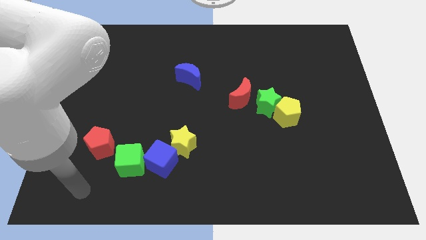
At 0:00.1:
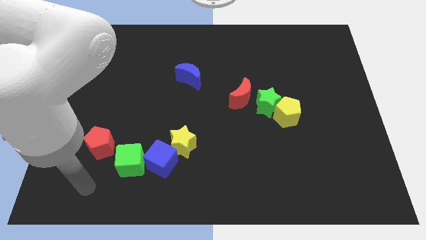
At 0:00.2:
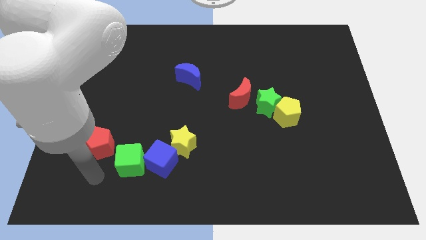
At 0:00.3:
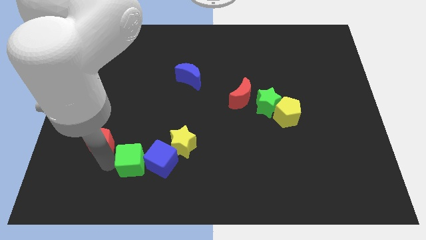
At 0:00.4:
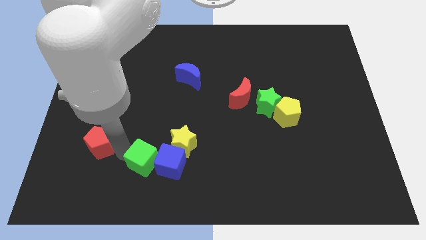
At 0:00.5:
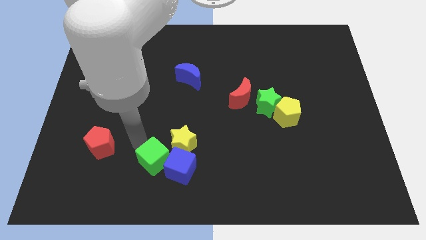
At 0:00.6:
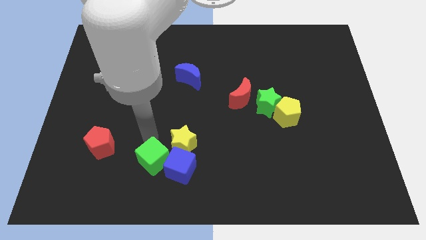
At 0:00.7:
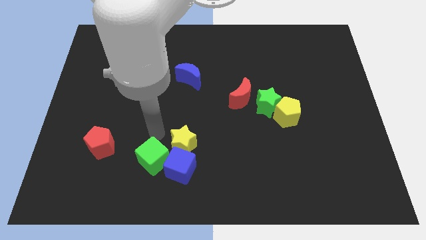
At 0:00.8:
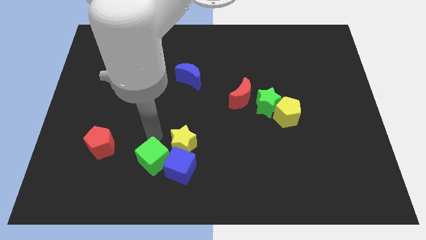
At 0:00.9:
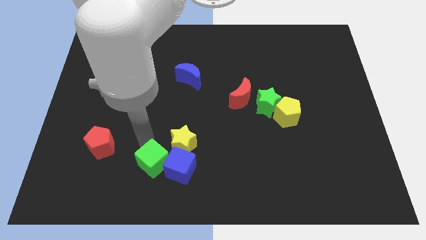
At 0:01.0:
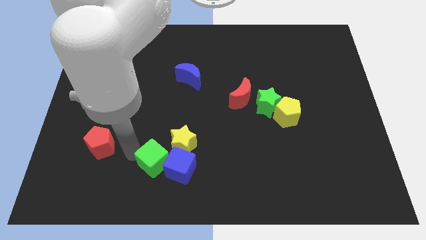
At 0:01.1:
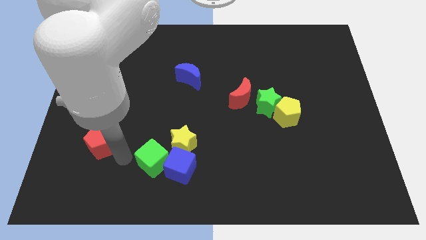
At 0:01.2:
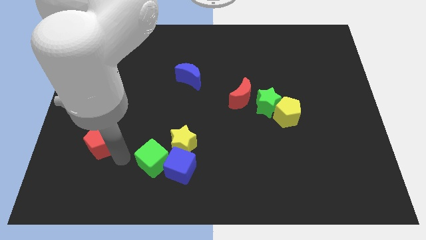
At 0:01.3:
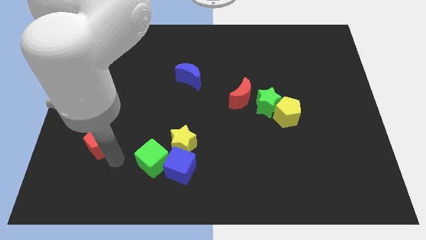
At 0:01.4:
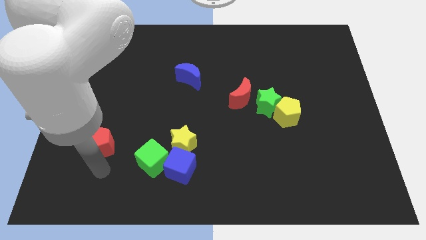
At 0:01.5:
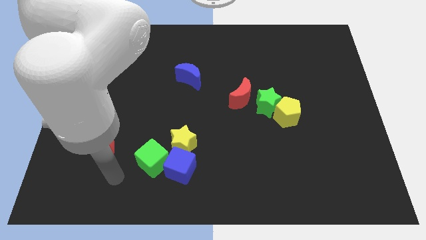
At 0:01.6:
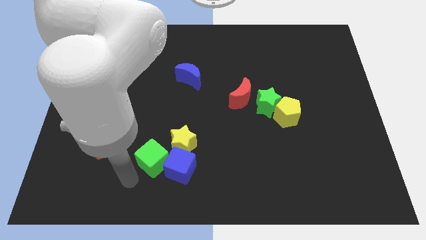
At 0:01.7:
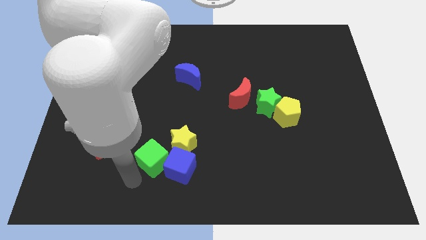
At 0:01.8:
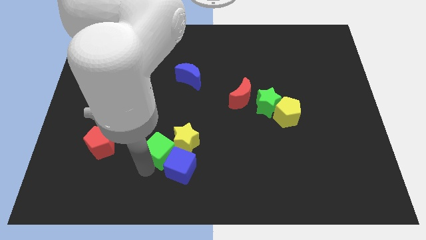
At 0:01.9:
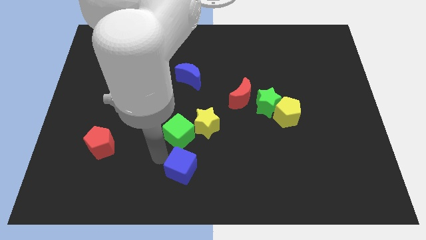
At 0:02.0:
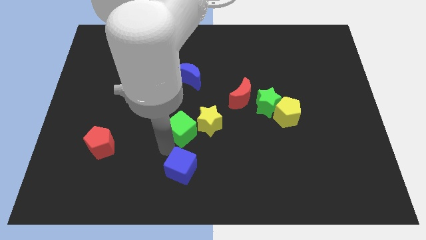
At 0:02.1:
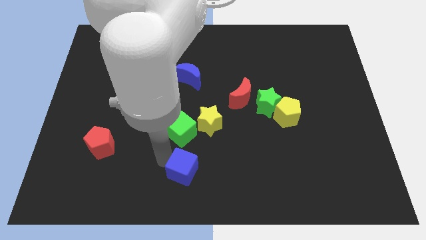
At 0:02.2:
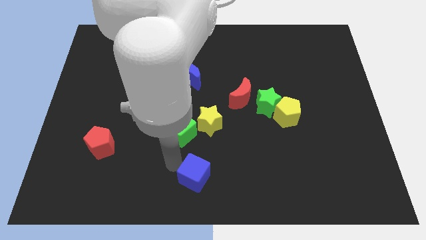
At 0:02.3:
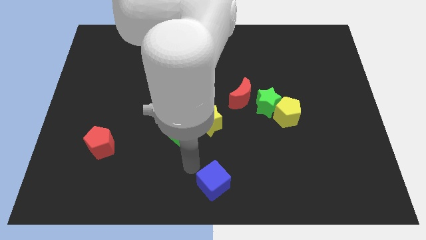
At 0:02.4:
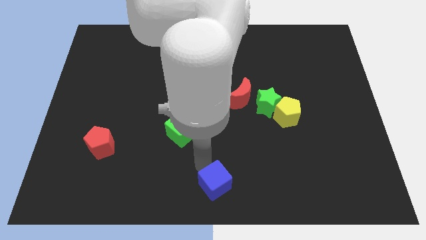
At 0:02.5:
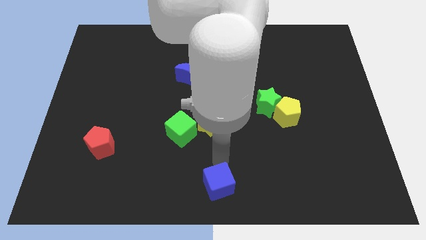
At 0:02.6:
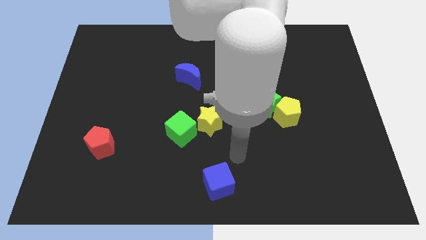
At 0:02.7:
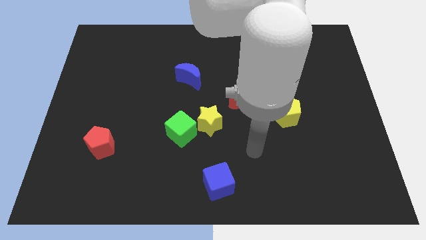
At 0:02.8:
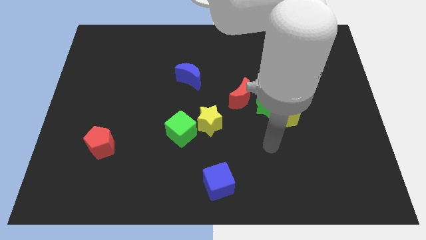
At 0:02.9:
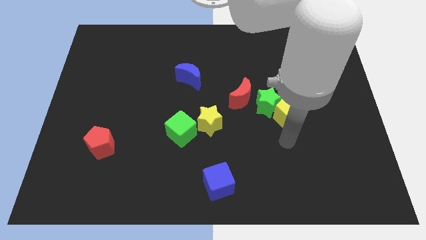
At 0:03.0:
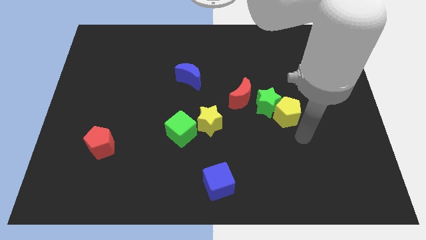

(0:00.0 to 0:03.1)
push the cubes and yellow star in different directions

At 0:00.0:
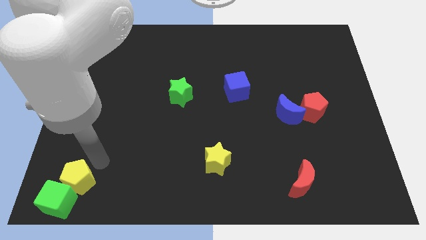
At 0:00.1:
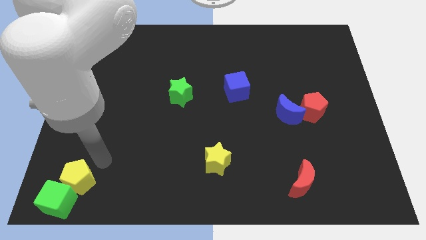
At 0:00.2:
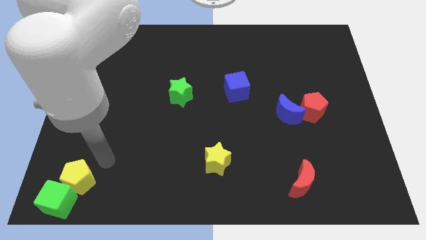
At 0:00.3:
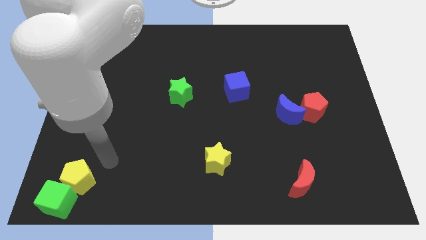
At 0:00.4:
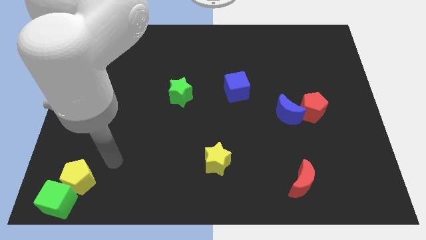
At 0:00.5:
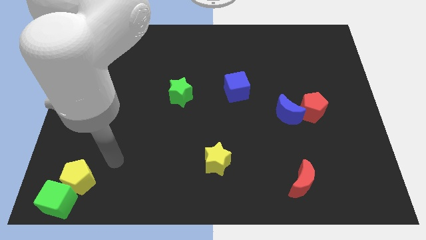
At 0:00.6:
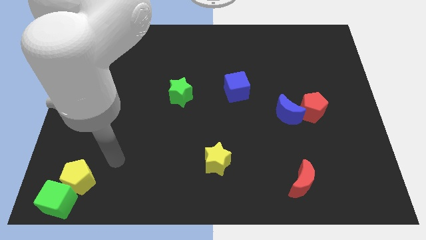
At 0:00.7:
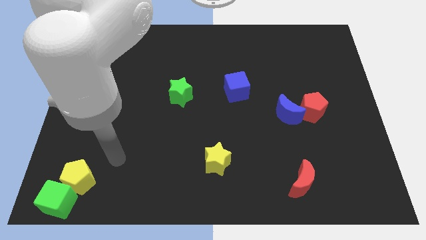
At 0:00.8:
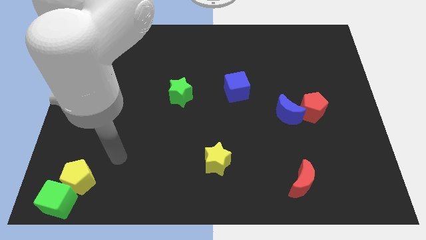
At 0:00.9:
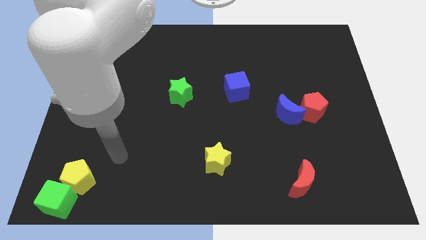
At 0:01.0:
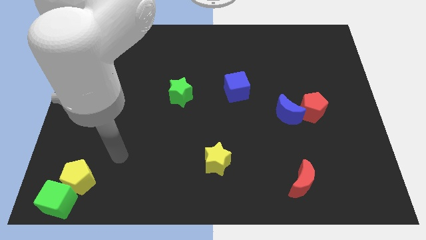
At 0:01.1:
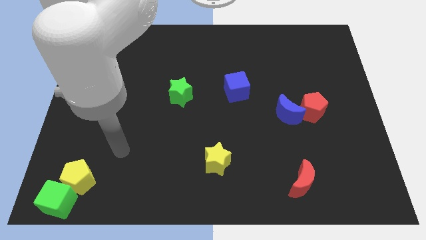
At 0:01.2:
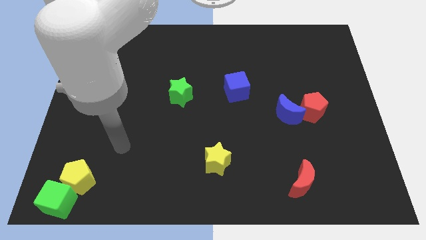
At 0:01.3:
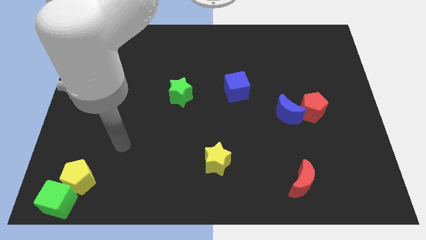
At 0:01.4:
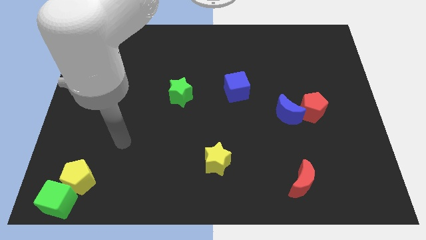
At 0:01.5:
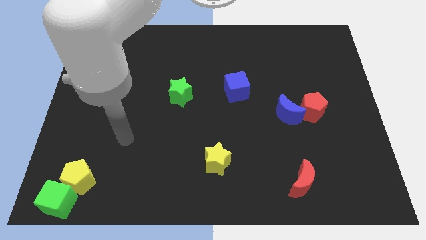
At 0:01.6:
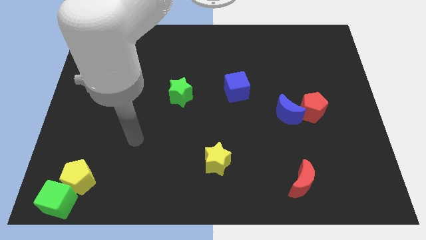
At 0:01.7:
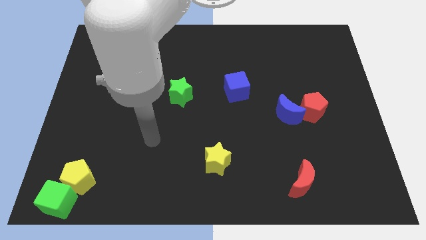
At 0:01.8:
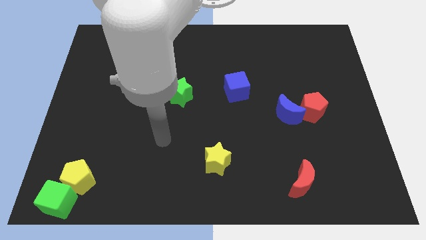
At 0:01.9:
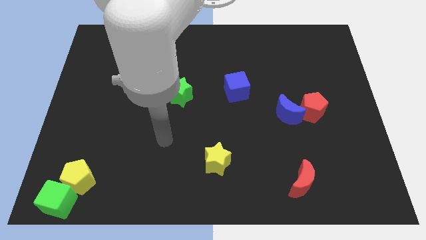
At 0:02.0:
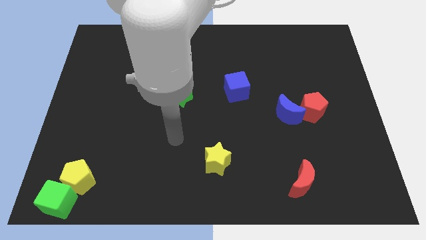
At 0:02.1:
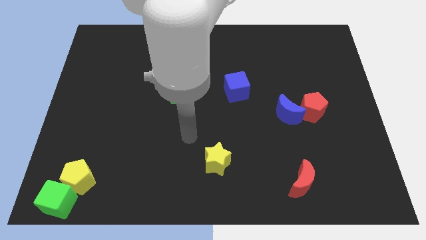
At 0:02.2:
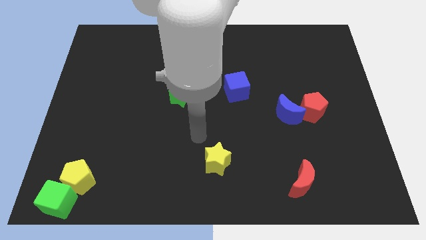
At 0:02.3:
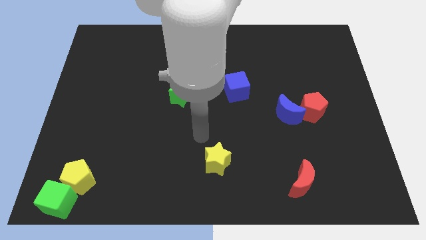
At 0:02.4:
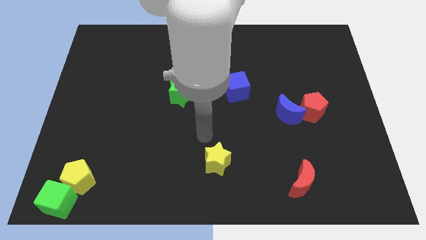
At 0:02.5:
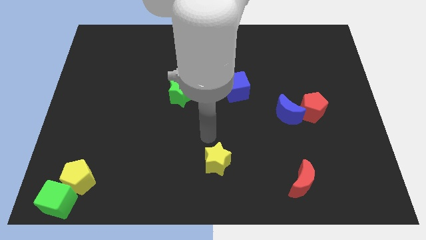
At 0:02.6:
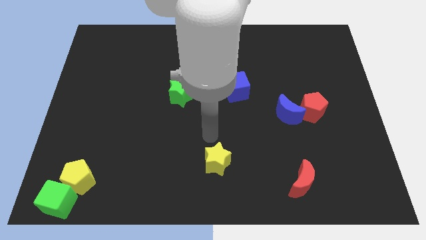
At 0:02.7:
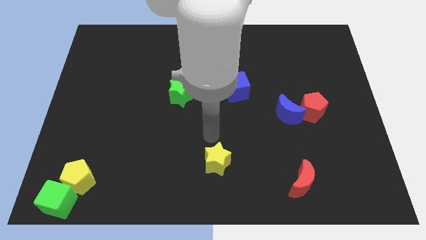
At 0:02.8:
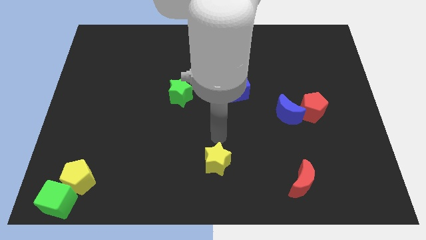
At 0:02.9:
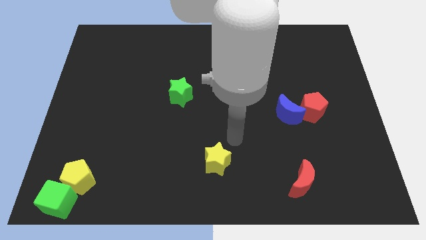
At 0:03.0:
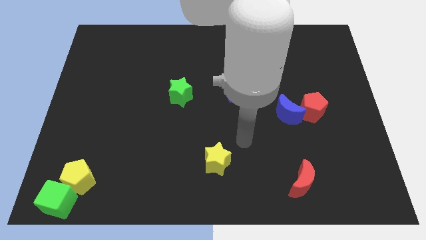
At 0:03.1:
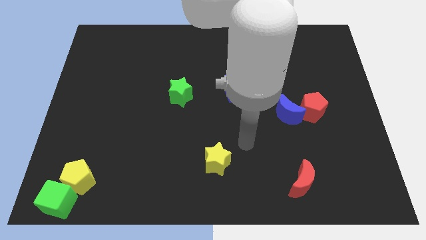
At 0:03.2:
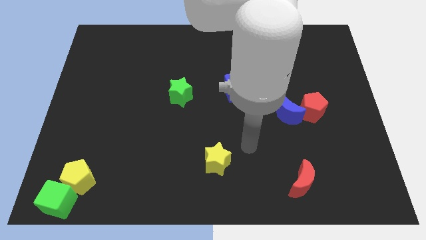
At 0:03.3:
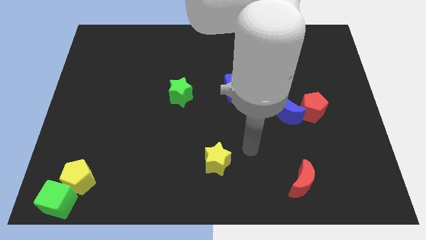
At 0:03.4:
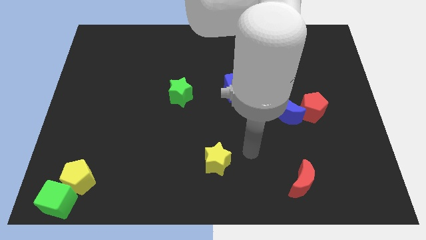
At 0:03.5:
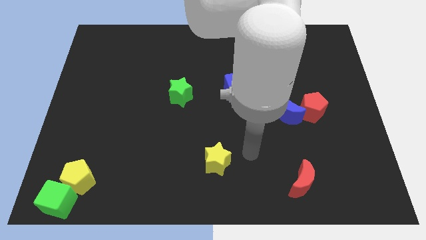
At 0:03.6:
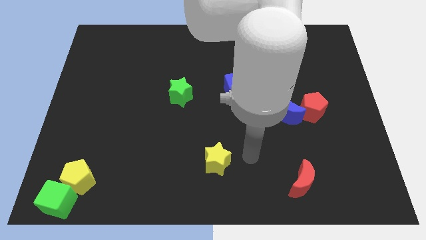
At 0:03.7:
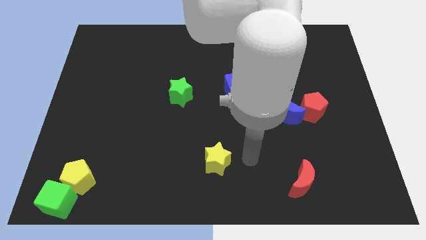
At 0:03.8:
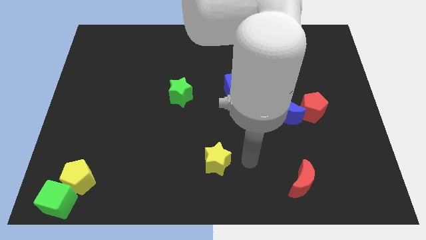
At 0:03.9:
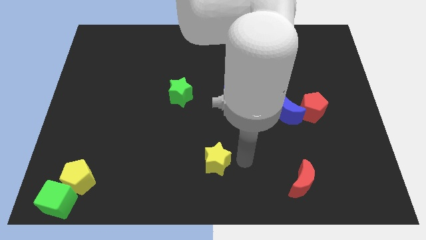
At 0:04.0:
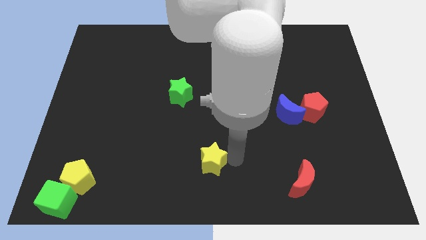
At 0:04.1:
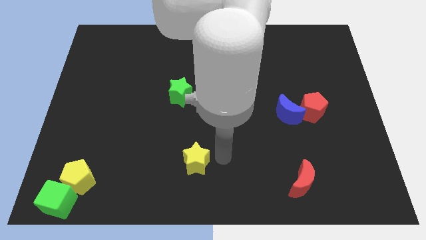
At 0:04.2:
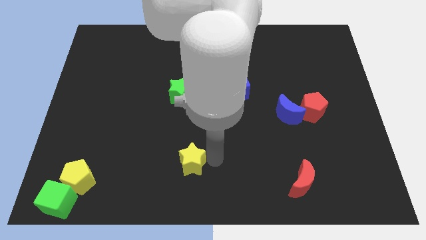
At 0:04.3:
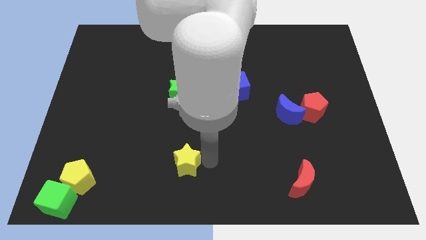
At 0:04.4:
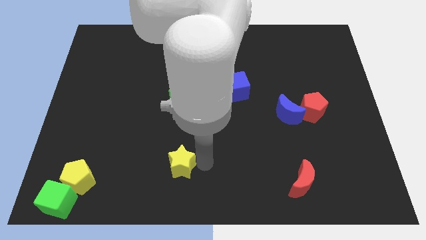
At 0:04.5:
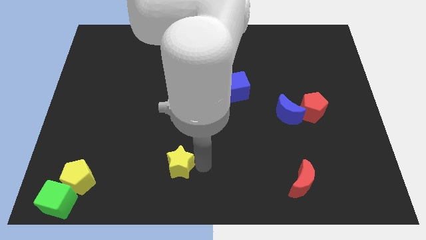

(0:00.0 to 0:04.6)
place the yellow star vertically below the green cast

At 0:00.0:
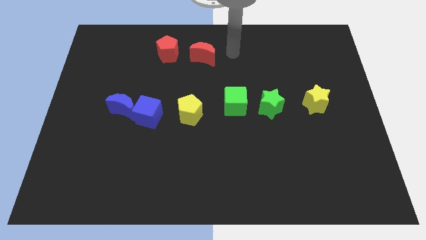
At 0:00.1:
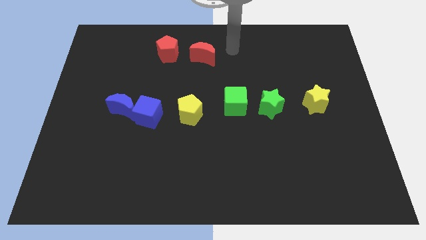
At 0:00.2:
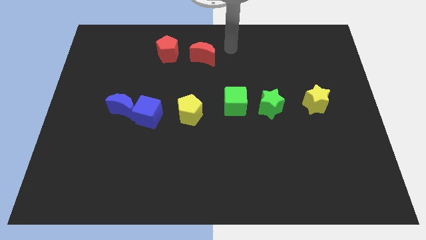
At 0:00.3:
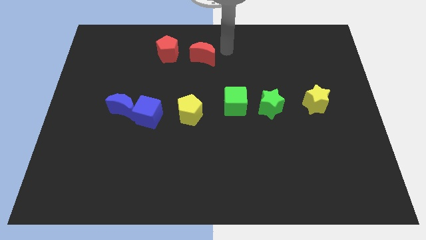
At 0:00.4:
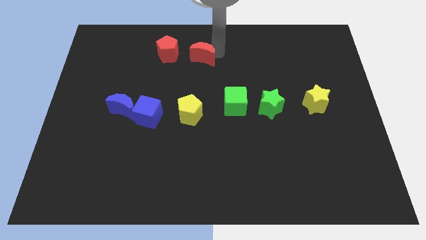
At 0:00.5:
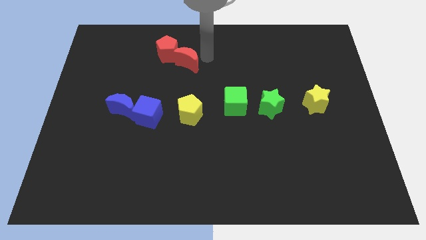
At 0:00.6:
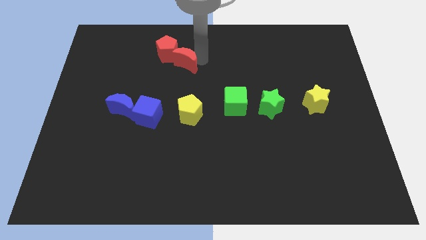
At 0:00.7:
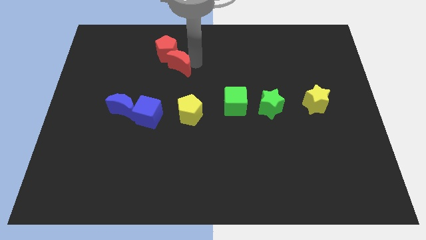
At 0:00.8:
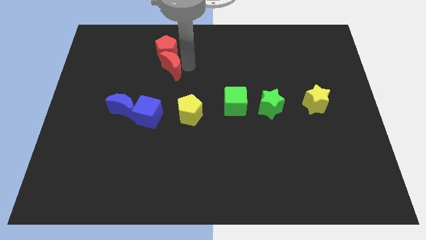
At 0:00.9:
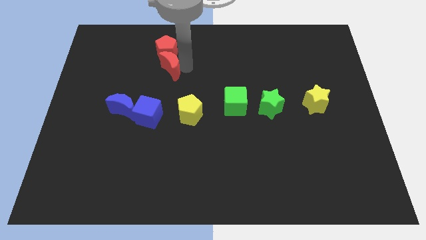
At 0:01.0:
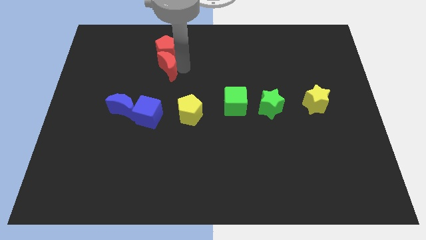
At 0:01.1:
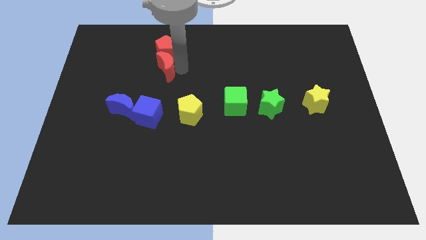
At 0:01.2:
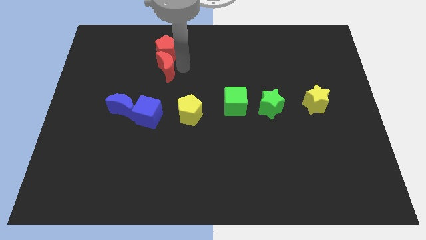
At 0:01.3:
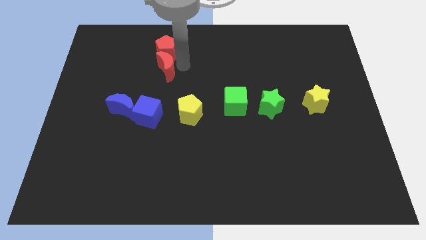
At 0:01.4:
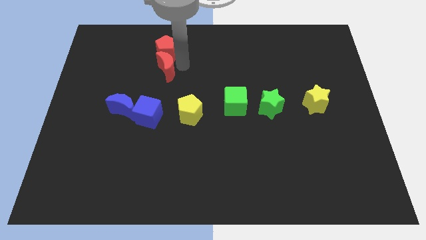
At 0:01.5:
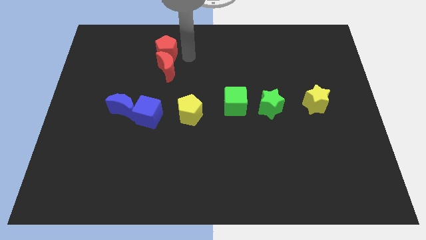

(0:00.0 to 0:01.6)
place the red crescent under the red pentagon
